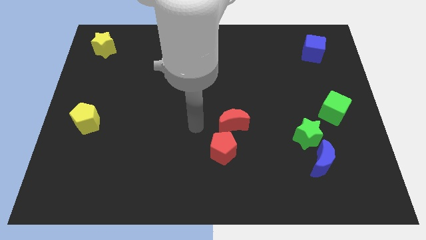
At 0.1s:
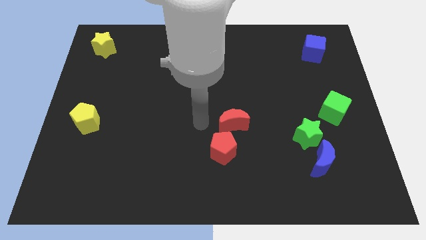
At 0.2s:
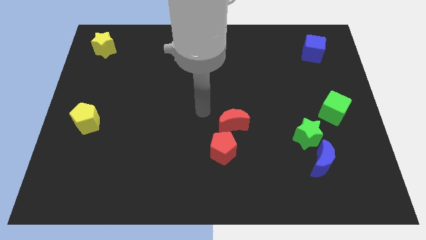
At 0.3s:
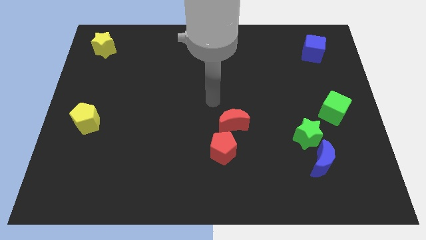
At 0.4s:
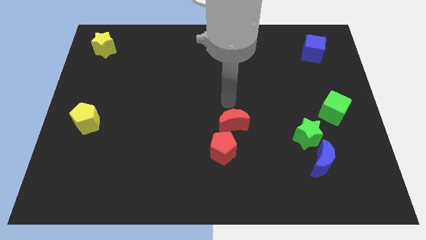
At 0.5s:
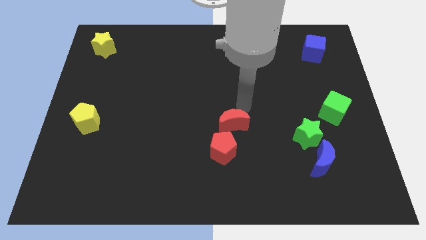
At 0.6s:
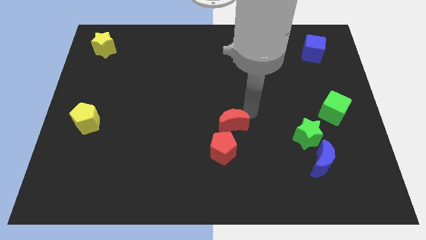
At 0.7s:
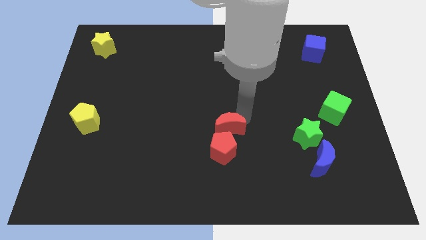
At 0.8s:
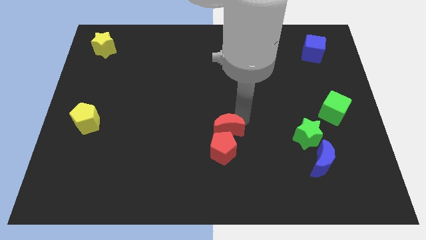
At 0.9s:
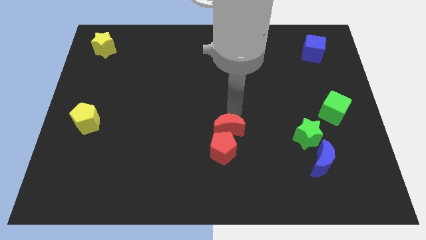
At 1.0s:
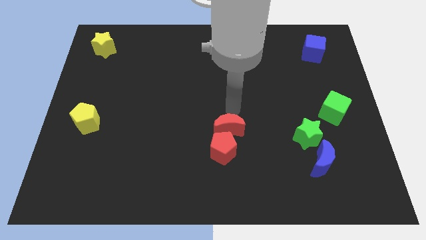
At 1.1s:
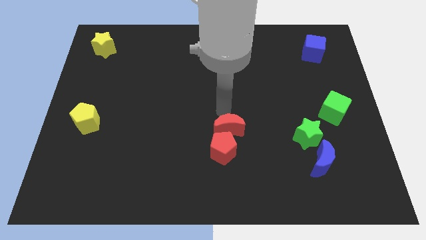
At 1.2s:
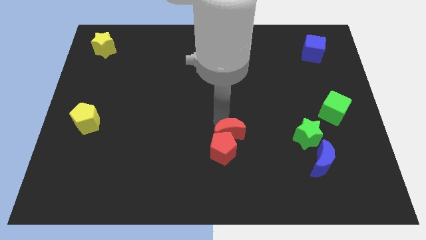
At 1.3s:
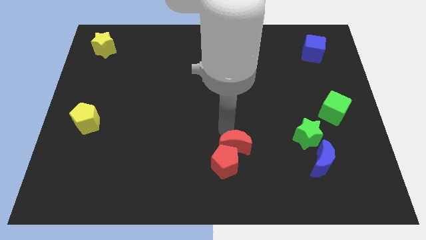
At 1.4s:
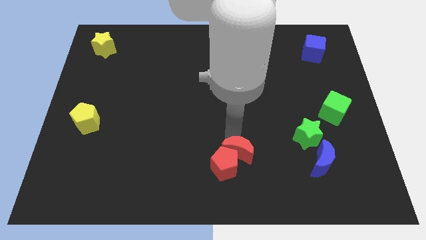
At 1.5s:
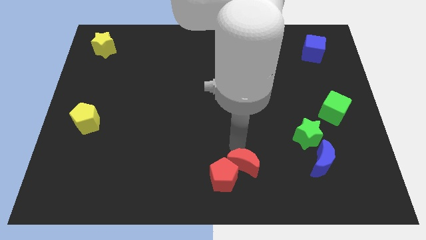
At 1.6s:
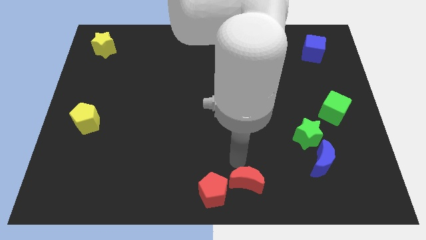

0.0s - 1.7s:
push the red pentagon with the red crescent towards the bottom center of the board

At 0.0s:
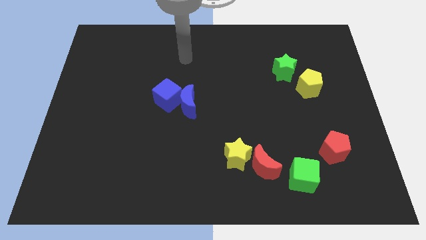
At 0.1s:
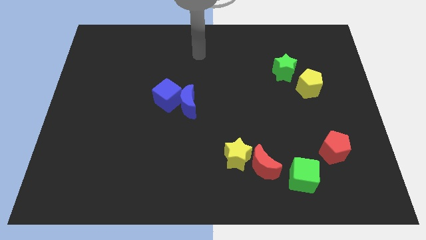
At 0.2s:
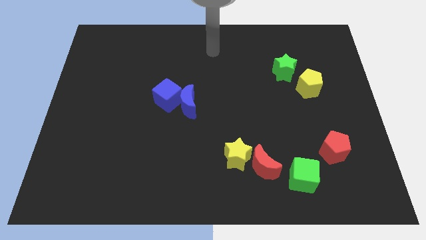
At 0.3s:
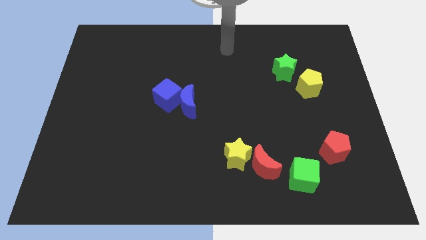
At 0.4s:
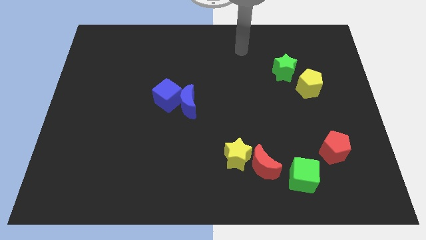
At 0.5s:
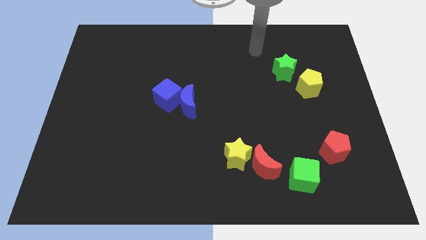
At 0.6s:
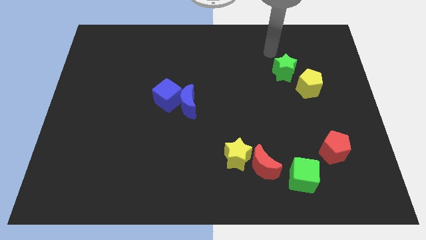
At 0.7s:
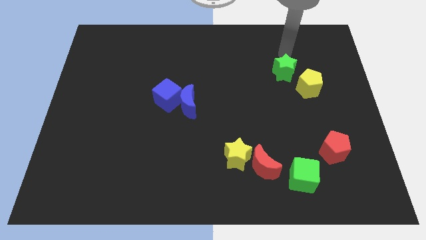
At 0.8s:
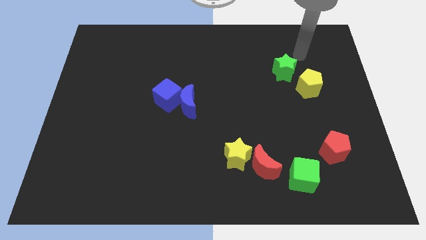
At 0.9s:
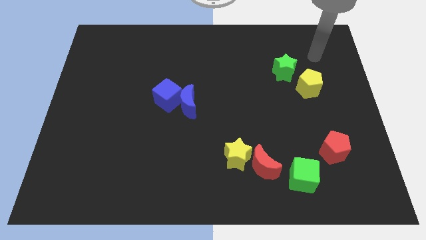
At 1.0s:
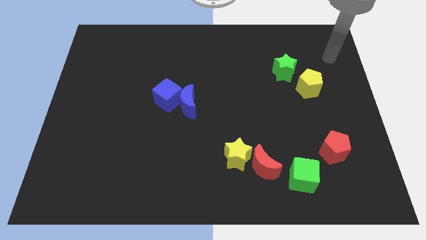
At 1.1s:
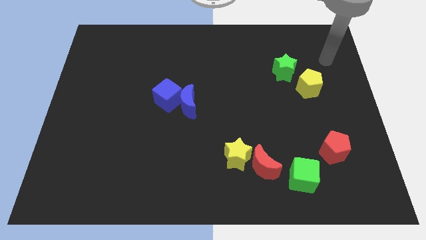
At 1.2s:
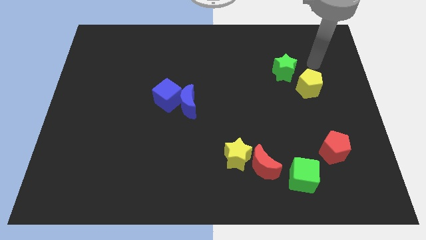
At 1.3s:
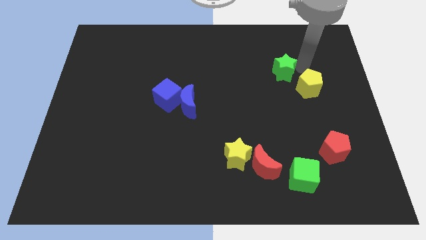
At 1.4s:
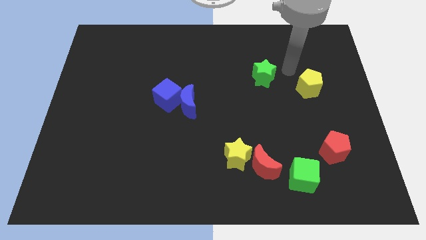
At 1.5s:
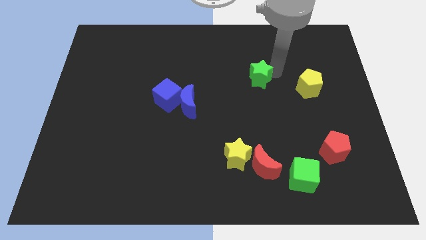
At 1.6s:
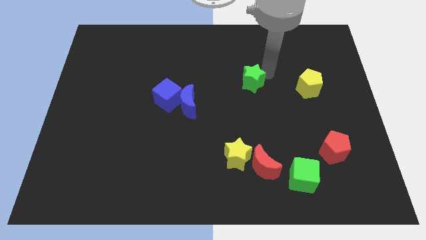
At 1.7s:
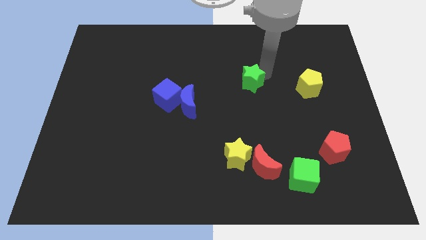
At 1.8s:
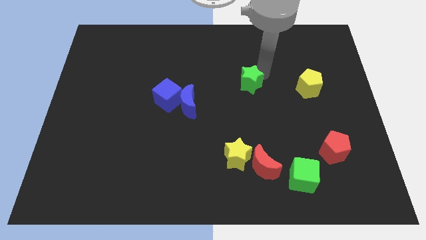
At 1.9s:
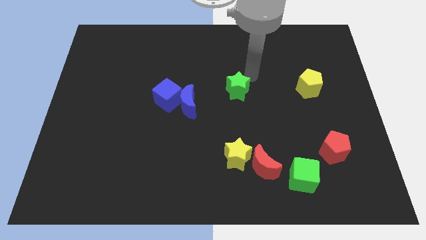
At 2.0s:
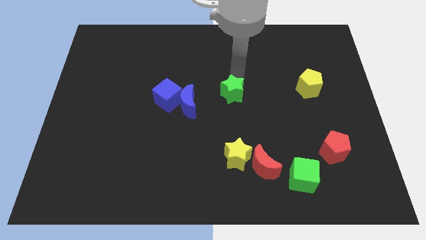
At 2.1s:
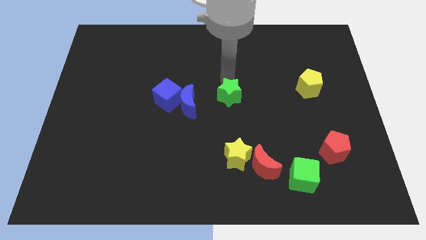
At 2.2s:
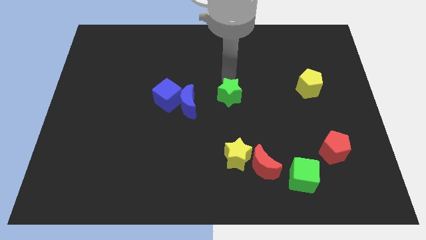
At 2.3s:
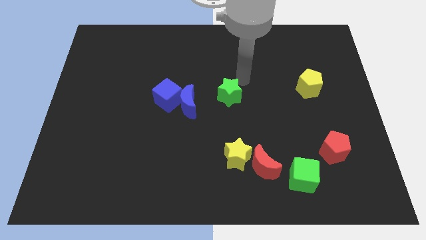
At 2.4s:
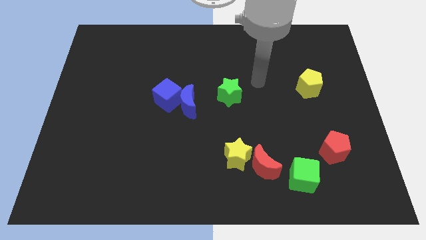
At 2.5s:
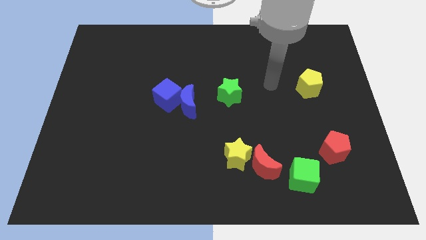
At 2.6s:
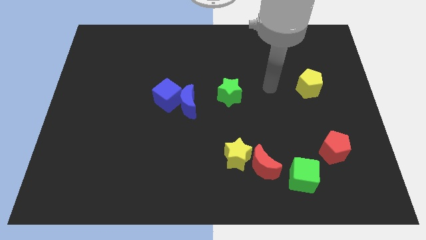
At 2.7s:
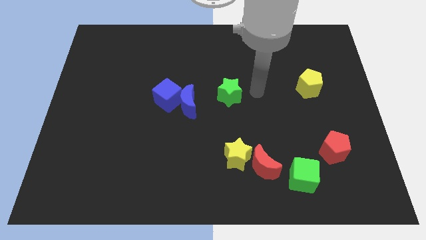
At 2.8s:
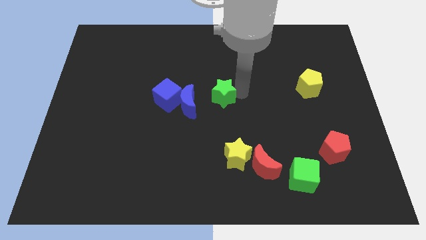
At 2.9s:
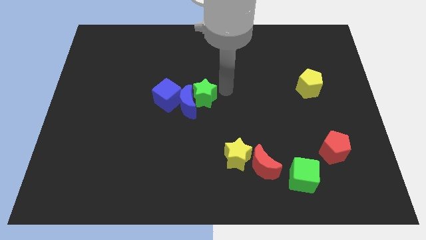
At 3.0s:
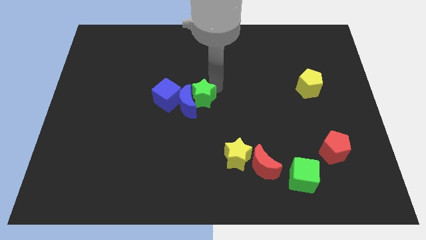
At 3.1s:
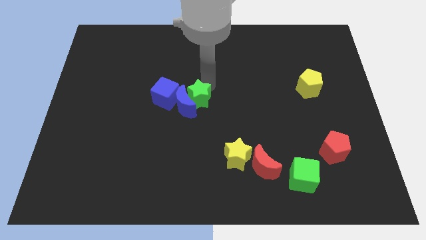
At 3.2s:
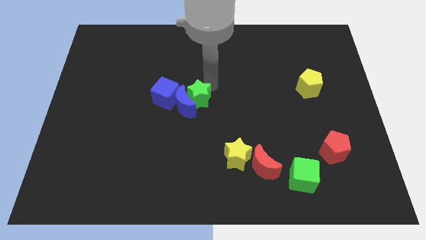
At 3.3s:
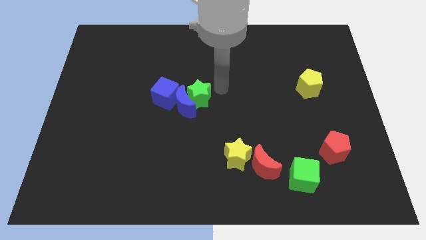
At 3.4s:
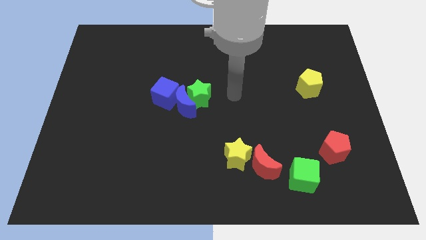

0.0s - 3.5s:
push the green star into the blue crescent

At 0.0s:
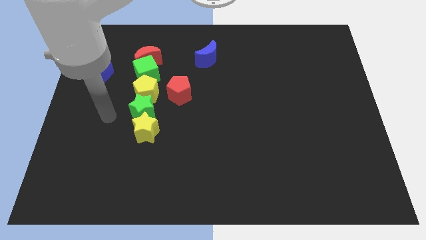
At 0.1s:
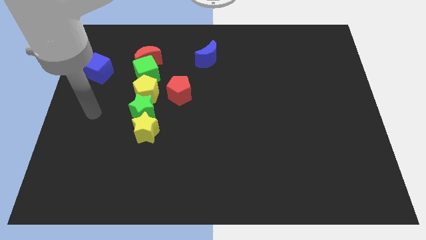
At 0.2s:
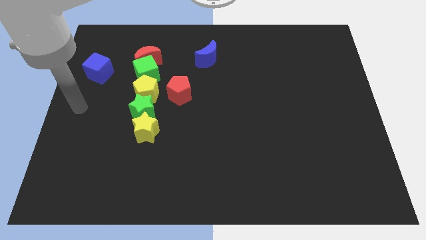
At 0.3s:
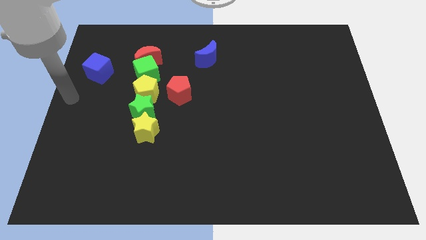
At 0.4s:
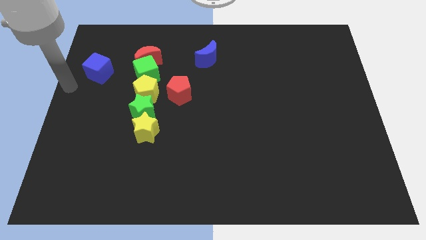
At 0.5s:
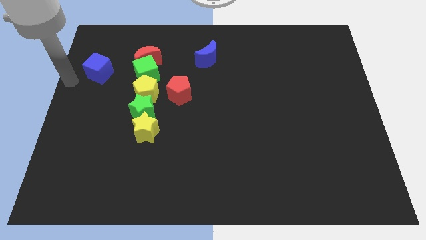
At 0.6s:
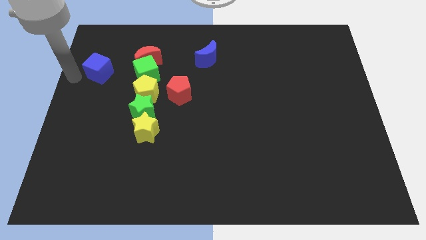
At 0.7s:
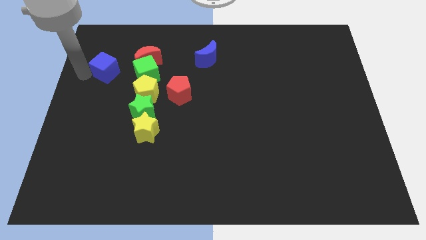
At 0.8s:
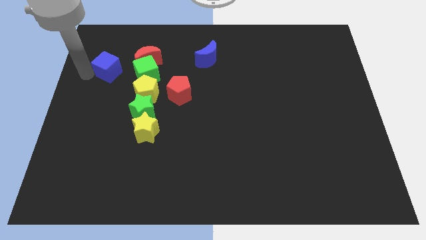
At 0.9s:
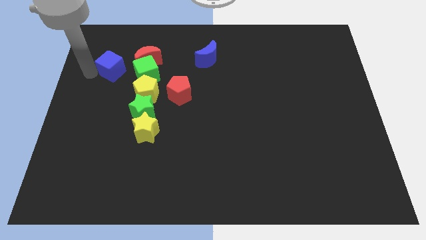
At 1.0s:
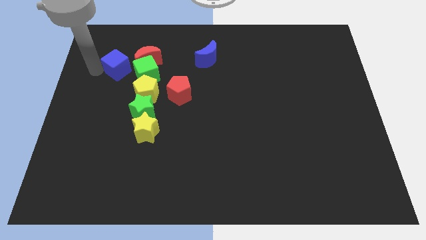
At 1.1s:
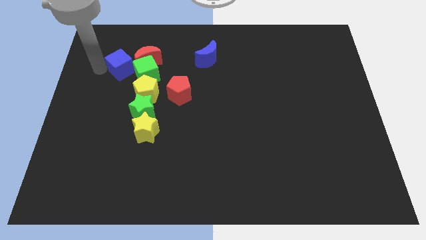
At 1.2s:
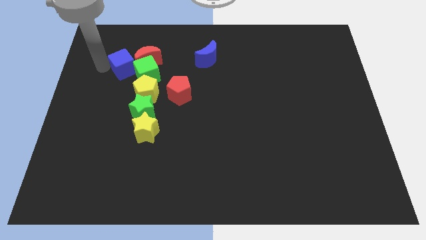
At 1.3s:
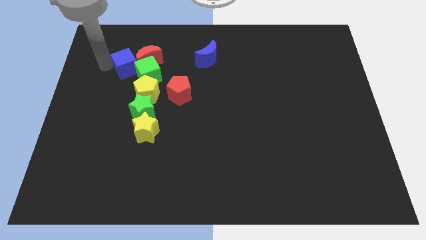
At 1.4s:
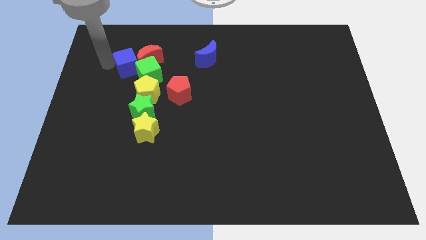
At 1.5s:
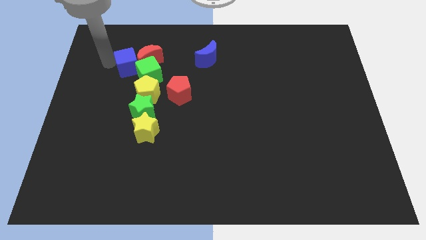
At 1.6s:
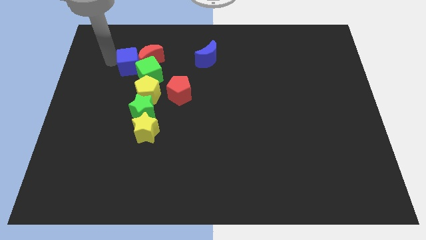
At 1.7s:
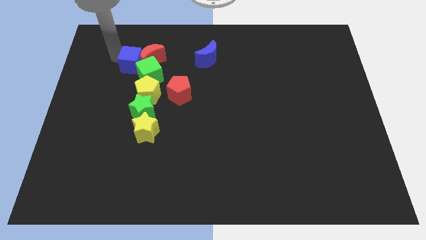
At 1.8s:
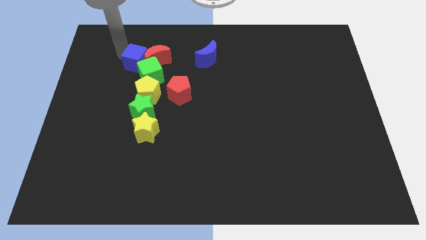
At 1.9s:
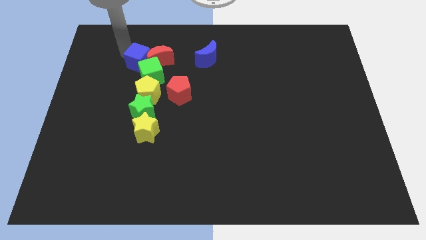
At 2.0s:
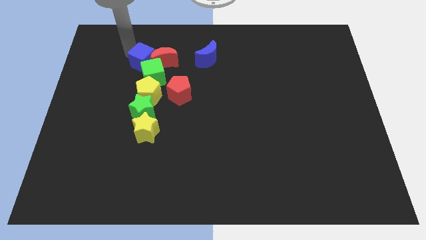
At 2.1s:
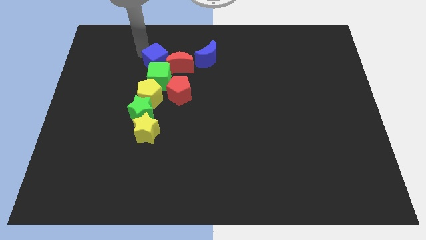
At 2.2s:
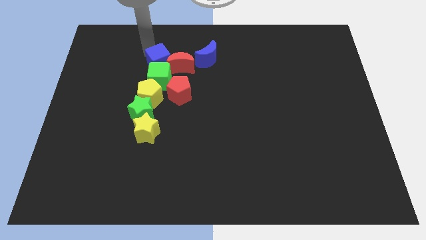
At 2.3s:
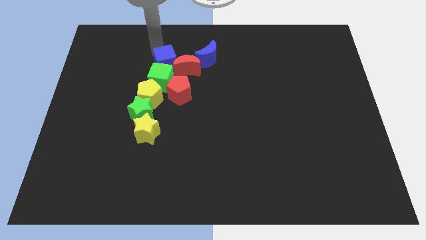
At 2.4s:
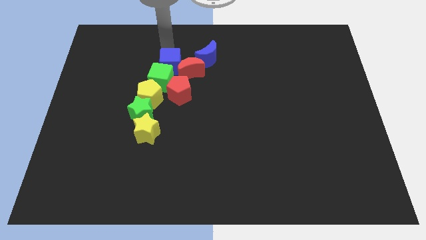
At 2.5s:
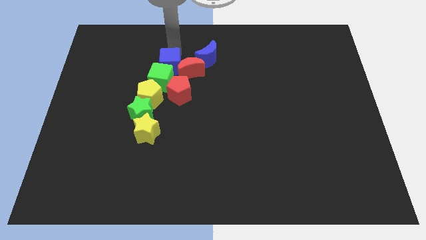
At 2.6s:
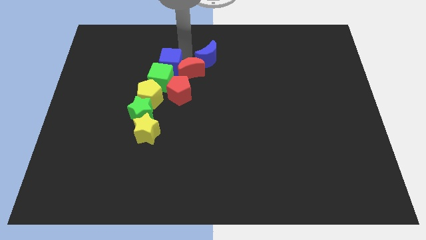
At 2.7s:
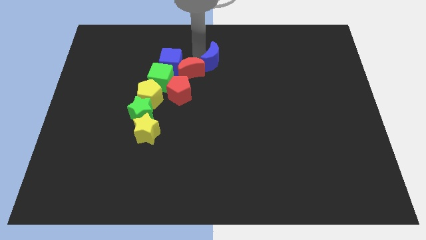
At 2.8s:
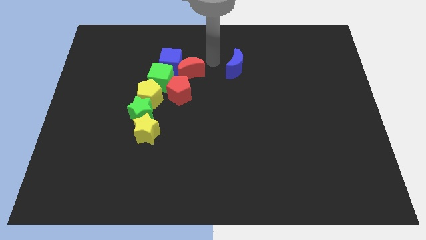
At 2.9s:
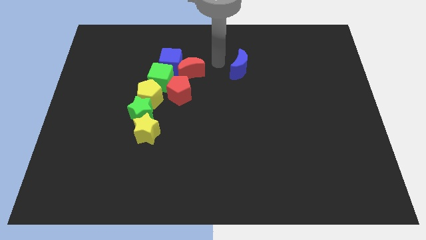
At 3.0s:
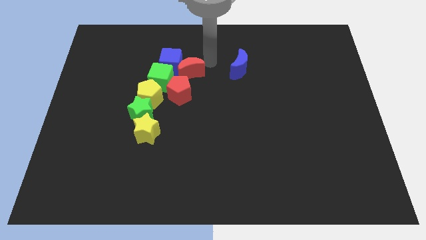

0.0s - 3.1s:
slide blue cube above the green cube

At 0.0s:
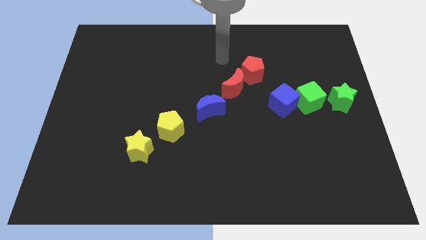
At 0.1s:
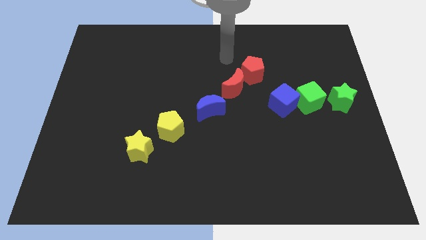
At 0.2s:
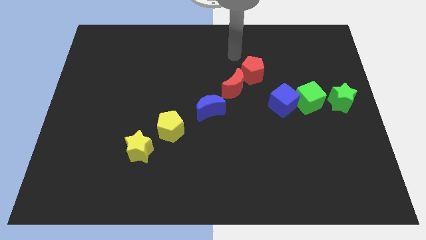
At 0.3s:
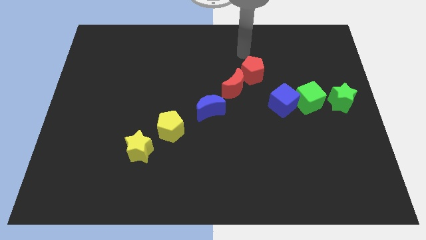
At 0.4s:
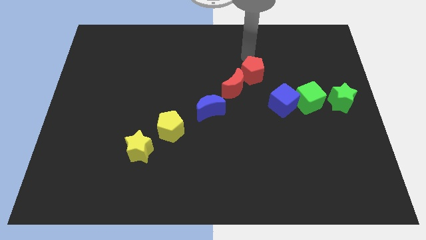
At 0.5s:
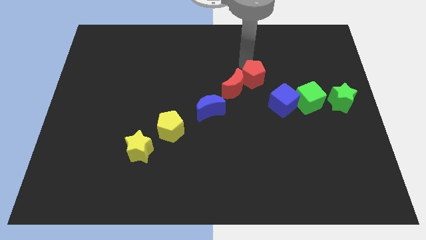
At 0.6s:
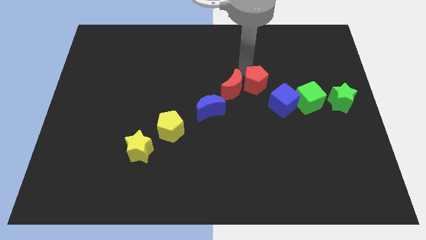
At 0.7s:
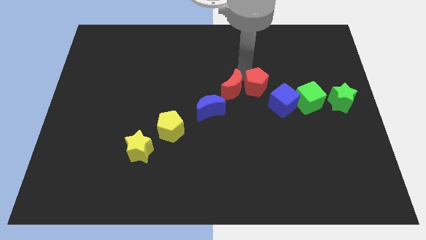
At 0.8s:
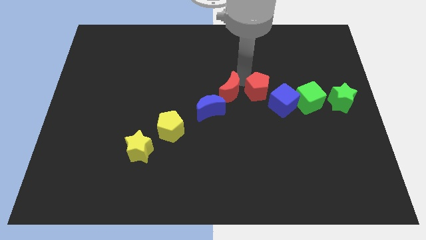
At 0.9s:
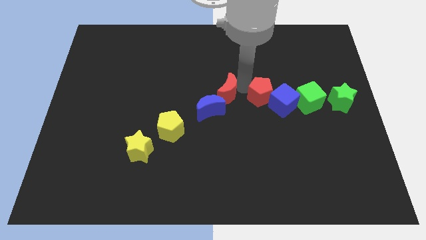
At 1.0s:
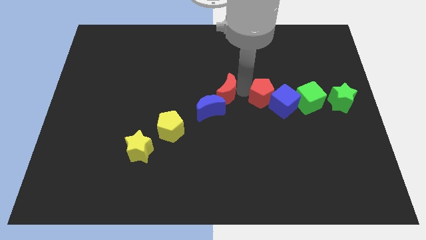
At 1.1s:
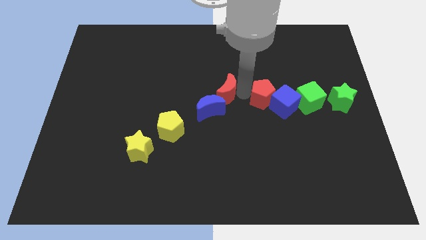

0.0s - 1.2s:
separate the red blocks
